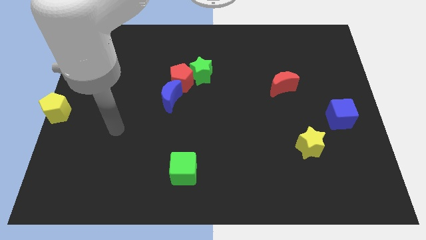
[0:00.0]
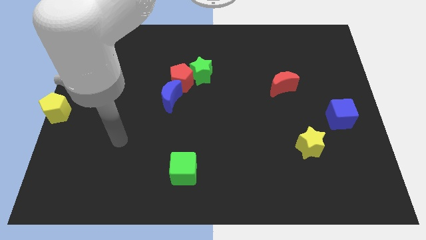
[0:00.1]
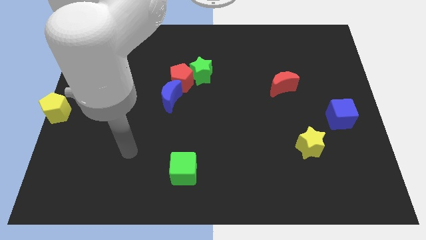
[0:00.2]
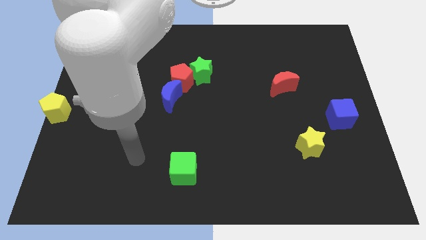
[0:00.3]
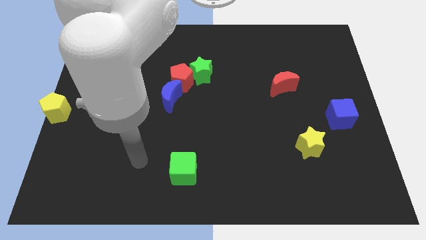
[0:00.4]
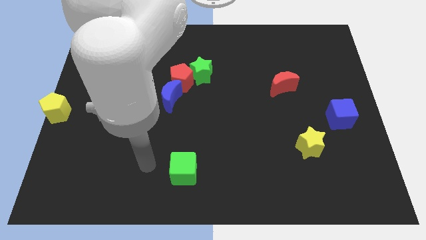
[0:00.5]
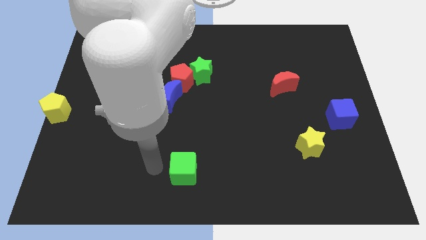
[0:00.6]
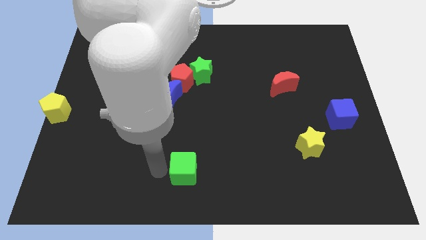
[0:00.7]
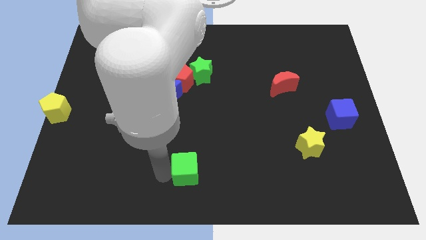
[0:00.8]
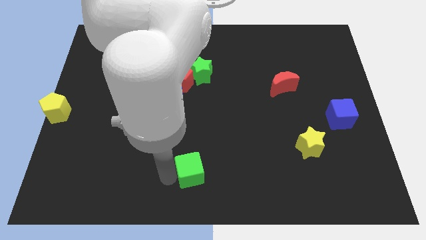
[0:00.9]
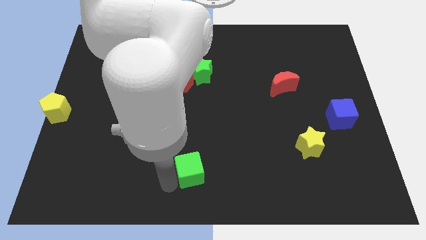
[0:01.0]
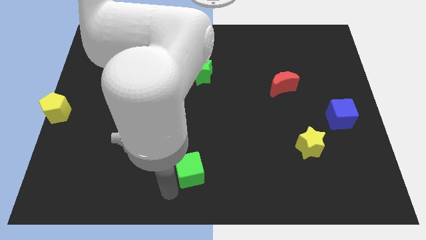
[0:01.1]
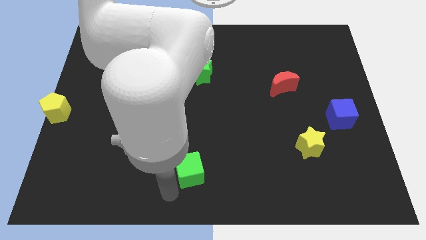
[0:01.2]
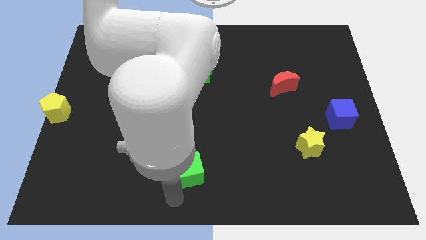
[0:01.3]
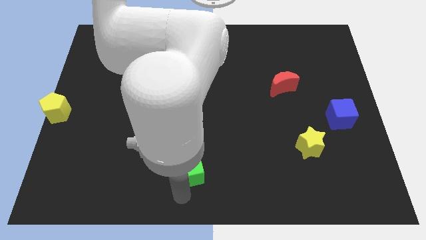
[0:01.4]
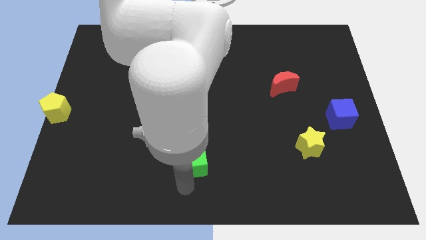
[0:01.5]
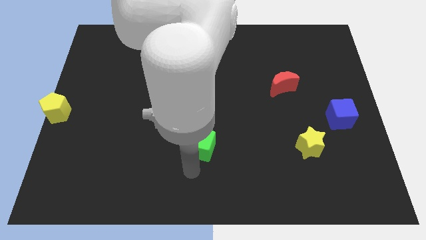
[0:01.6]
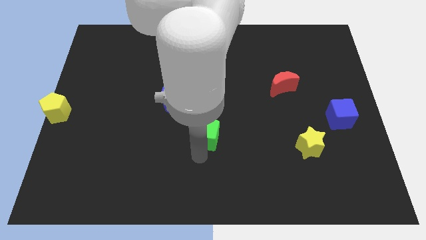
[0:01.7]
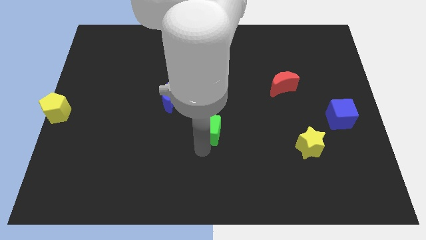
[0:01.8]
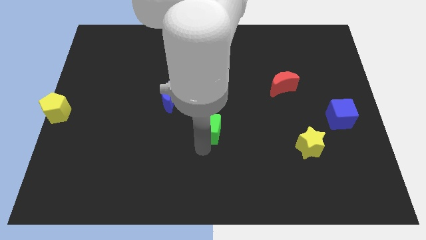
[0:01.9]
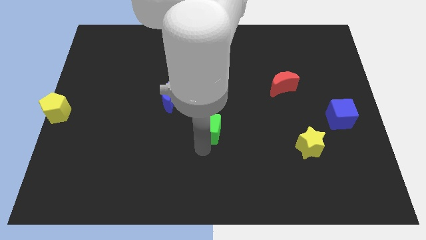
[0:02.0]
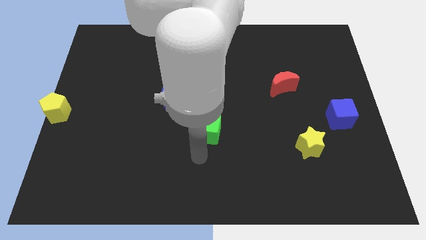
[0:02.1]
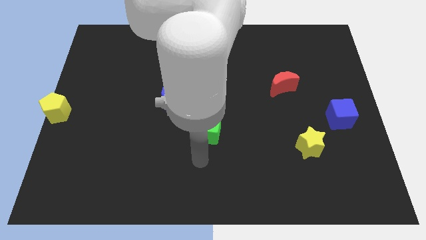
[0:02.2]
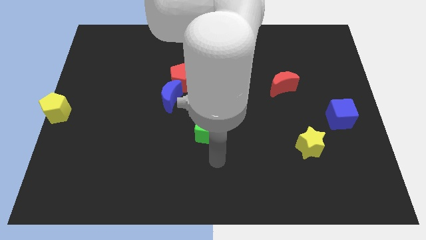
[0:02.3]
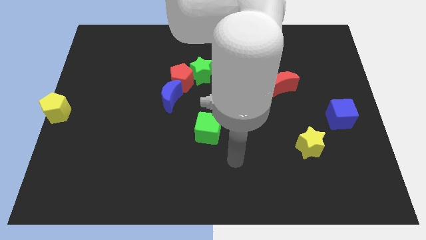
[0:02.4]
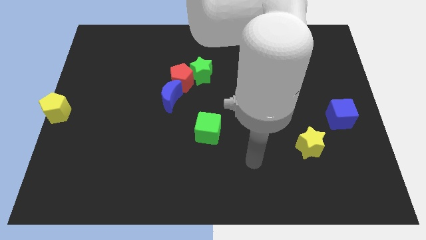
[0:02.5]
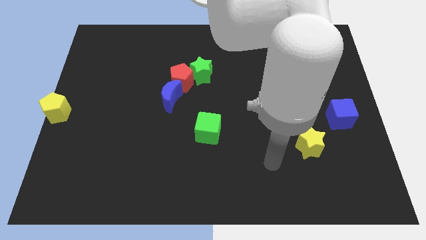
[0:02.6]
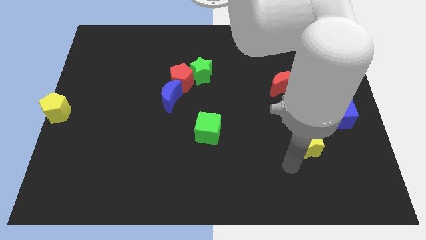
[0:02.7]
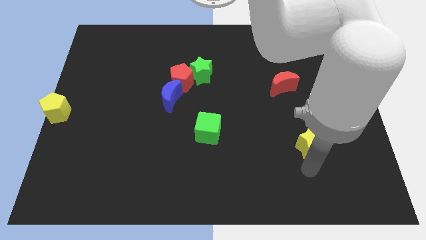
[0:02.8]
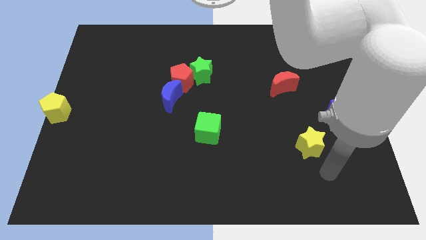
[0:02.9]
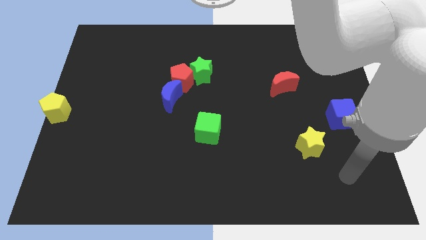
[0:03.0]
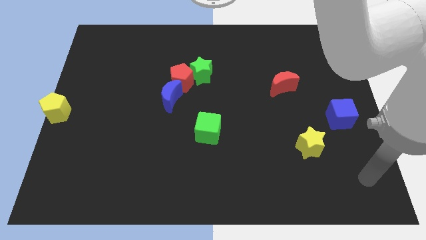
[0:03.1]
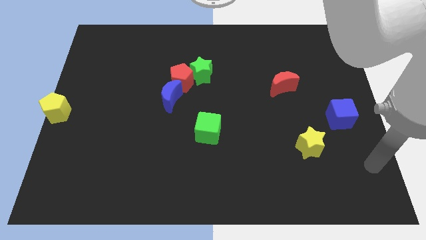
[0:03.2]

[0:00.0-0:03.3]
move the green cube to center of the board

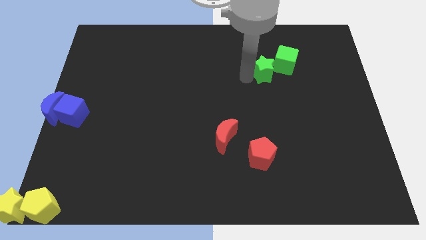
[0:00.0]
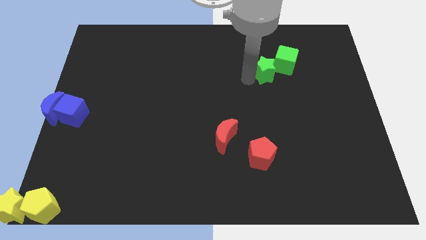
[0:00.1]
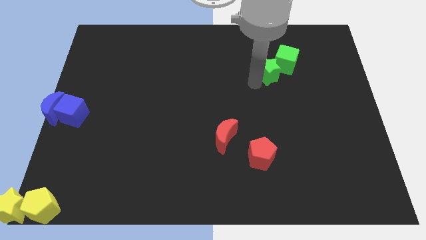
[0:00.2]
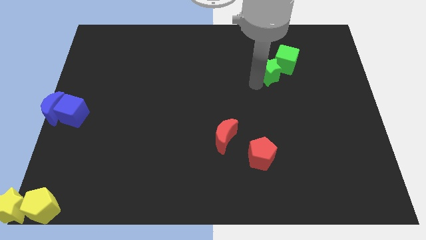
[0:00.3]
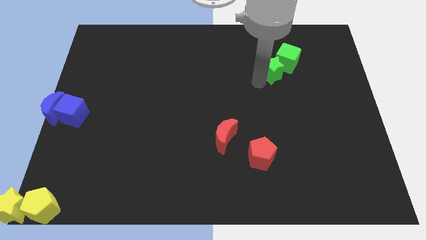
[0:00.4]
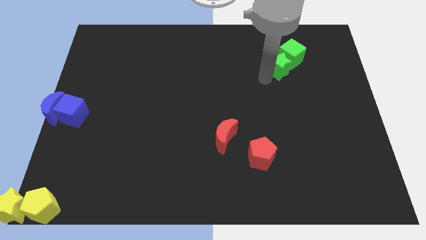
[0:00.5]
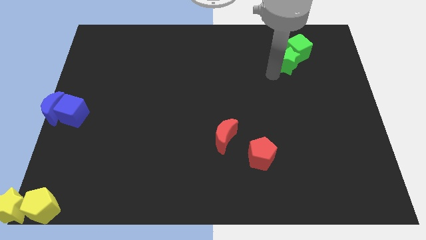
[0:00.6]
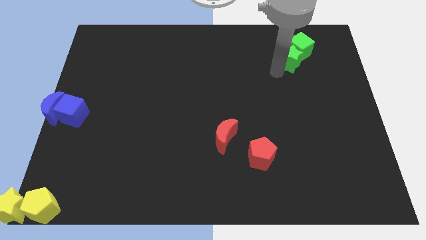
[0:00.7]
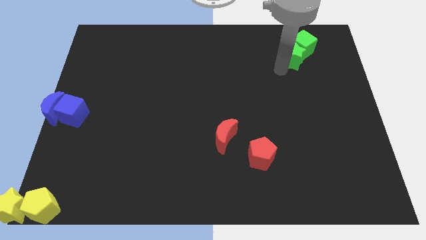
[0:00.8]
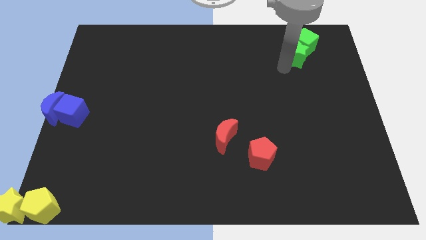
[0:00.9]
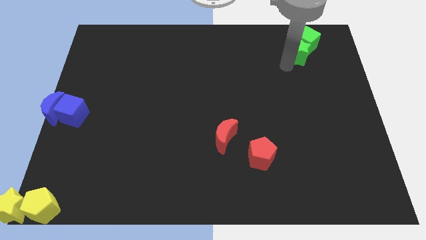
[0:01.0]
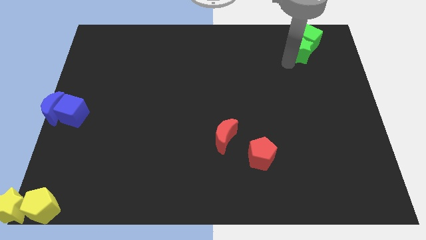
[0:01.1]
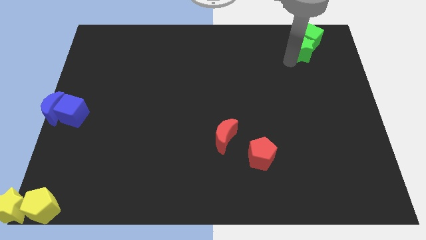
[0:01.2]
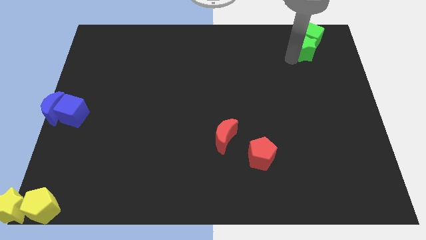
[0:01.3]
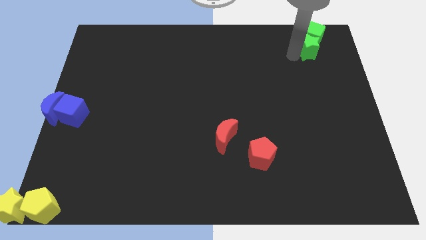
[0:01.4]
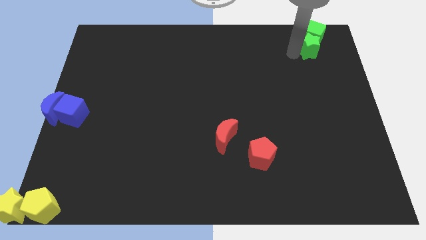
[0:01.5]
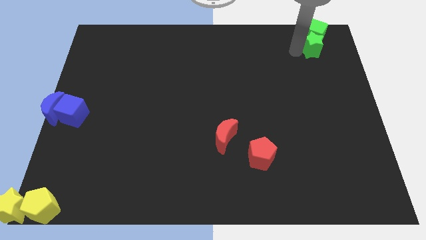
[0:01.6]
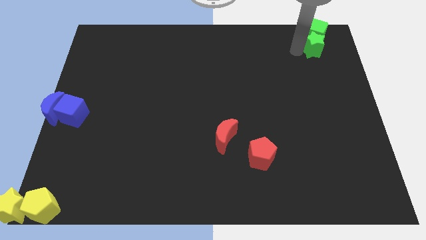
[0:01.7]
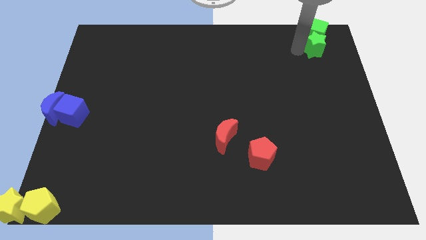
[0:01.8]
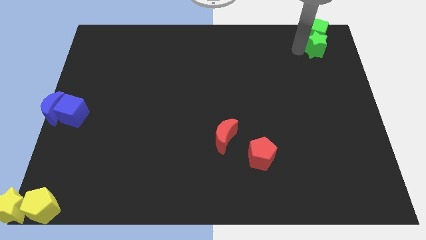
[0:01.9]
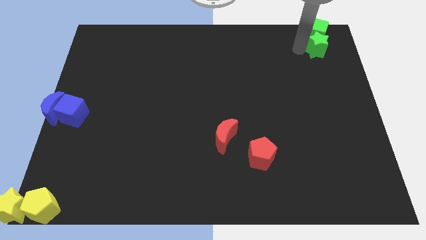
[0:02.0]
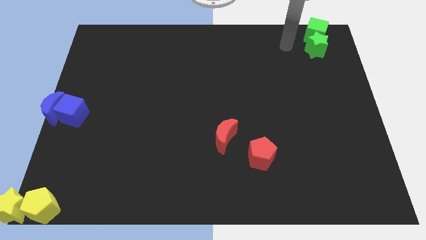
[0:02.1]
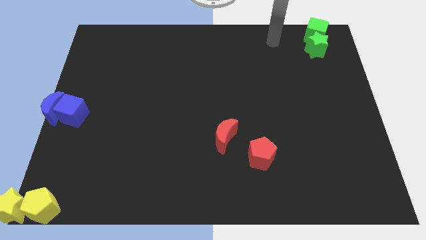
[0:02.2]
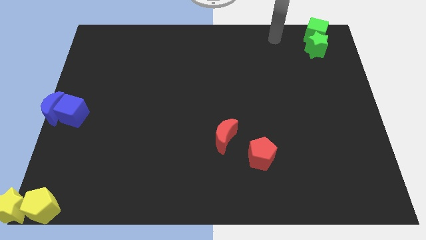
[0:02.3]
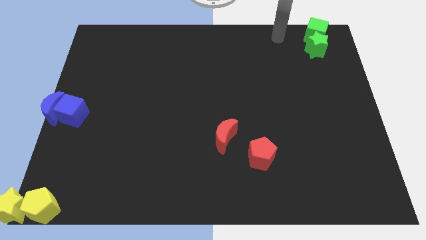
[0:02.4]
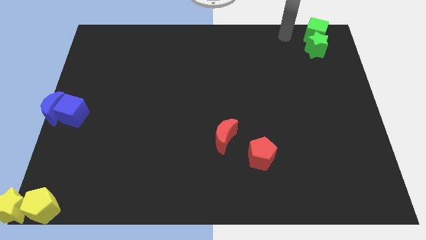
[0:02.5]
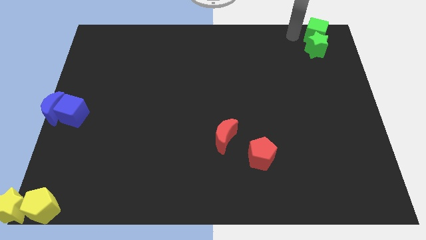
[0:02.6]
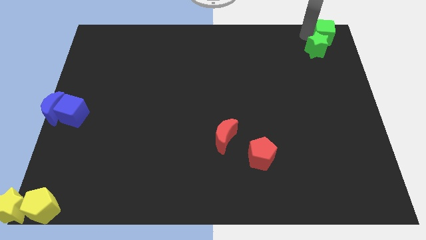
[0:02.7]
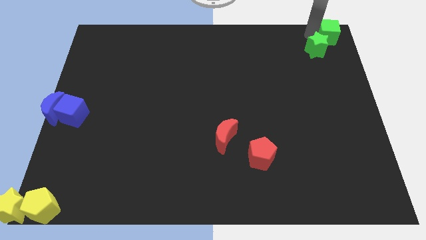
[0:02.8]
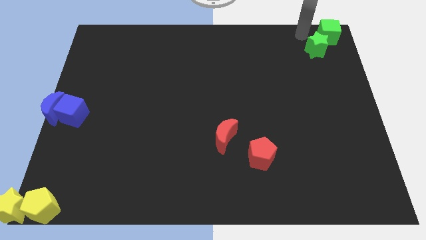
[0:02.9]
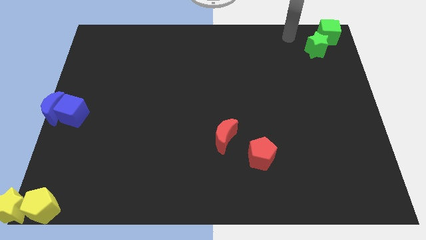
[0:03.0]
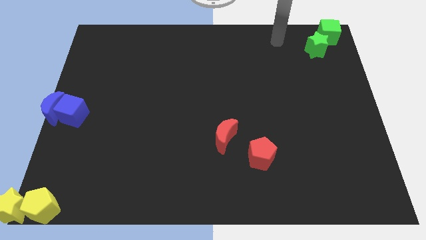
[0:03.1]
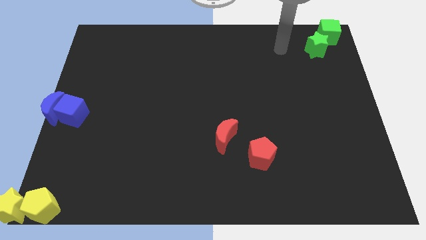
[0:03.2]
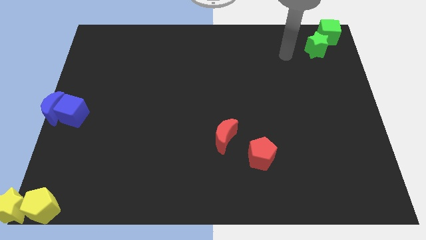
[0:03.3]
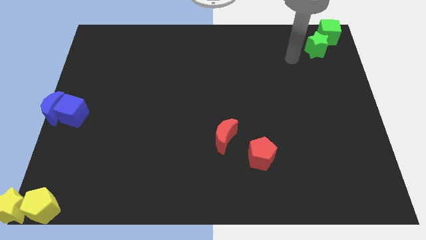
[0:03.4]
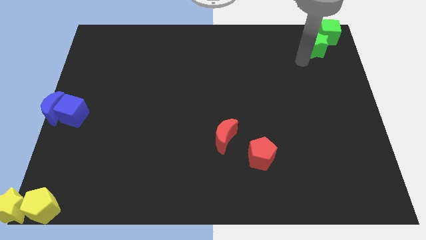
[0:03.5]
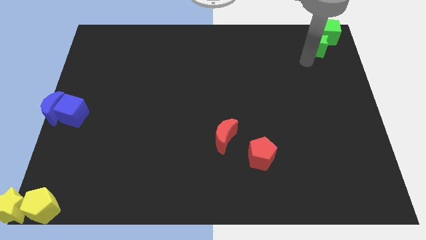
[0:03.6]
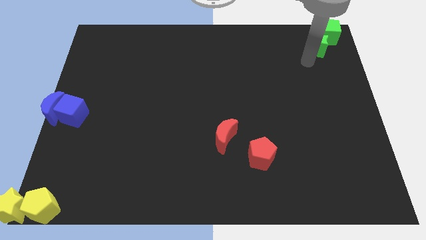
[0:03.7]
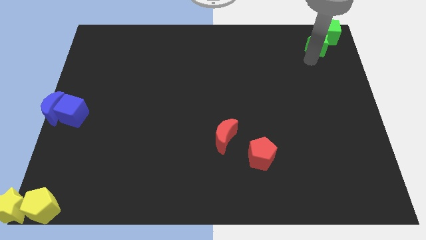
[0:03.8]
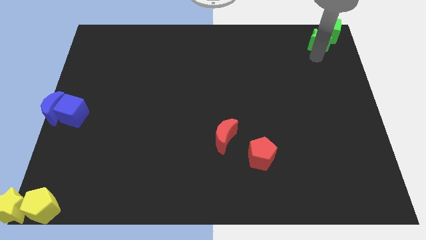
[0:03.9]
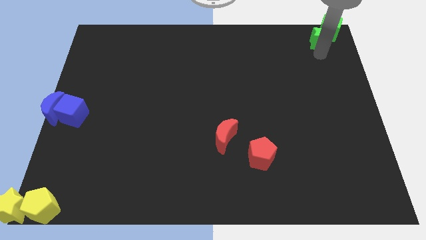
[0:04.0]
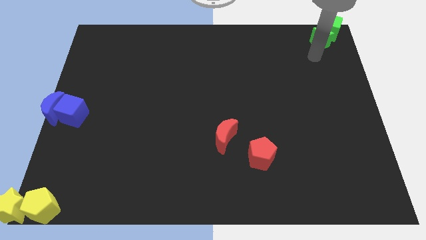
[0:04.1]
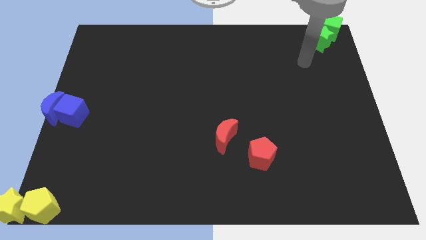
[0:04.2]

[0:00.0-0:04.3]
place the green blocks to the top right corner

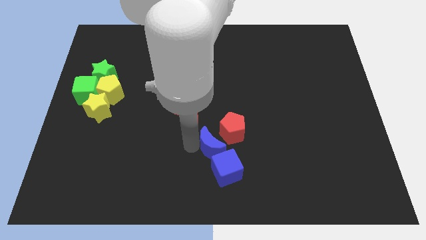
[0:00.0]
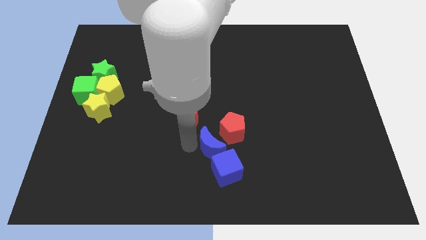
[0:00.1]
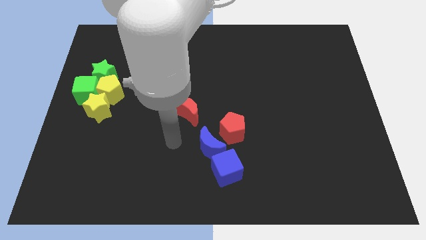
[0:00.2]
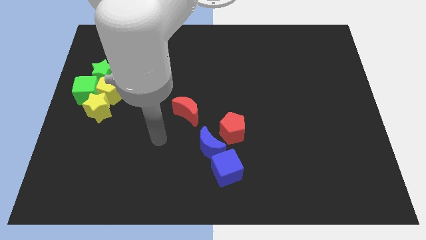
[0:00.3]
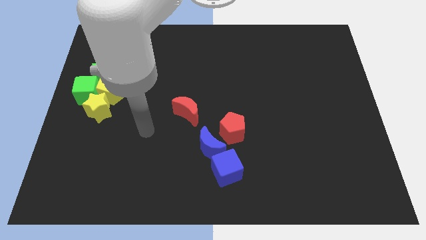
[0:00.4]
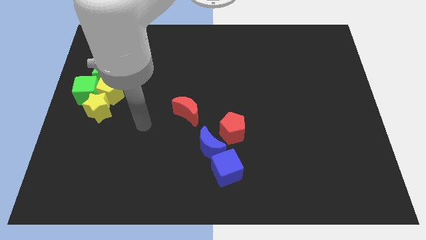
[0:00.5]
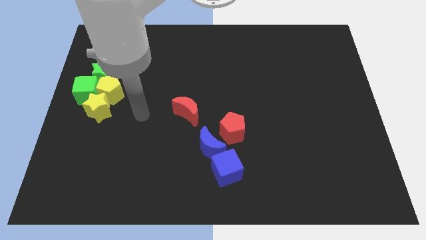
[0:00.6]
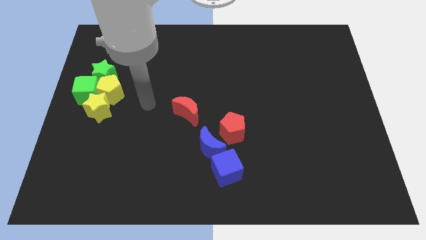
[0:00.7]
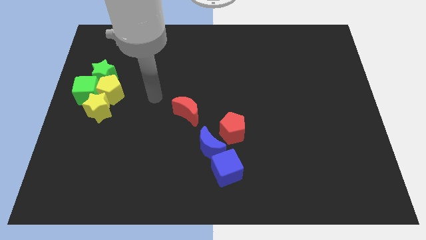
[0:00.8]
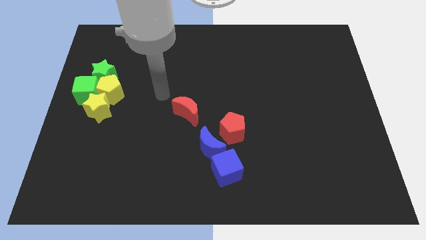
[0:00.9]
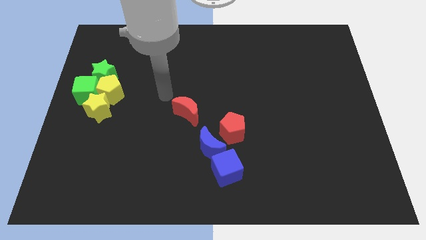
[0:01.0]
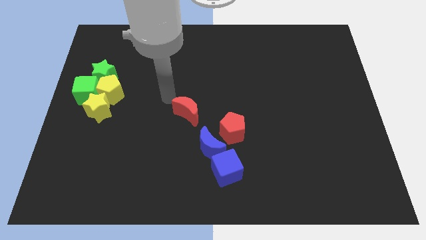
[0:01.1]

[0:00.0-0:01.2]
put your hand above the red crescent

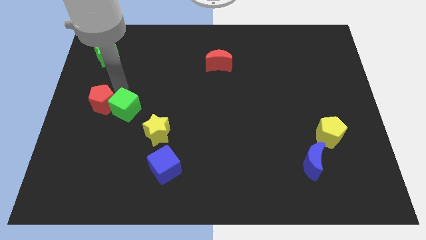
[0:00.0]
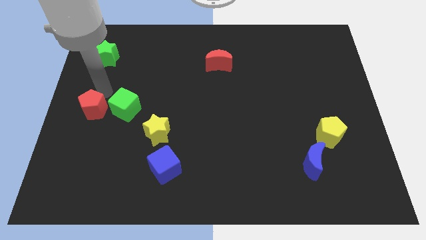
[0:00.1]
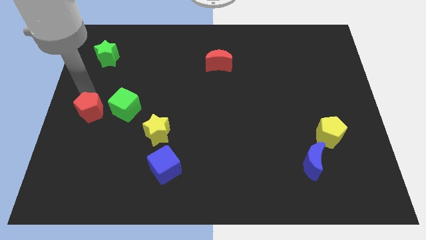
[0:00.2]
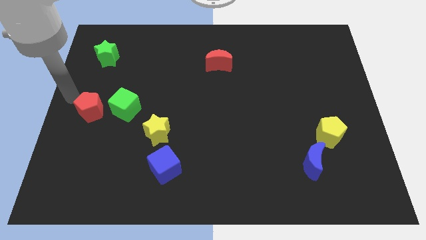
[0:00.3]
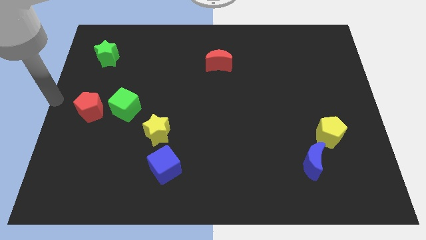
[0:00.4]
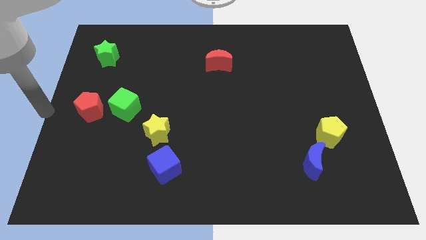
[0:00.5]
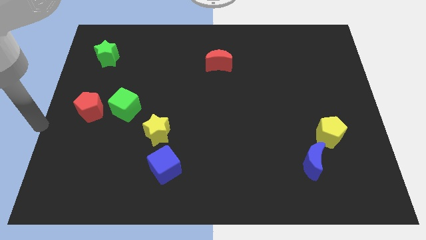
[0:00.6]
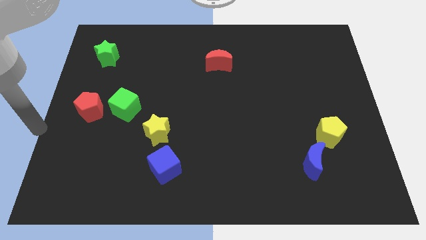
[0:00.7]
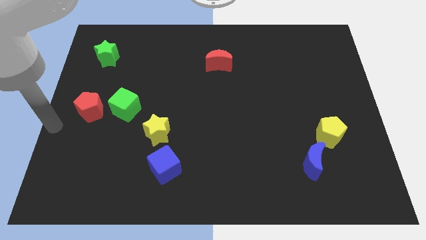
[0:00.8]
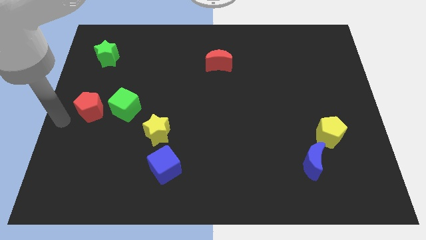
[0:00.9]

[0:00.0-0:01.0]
push red pentagon downwards a bit
